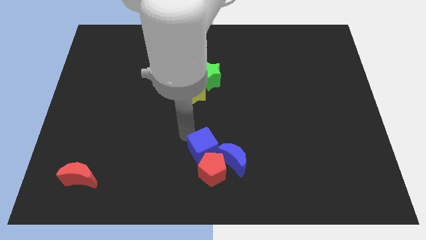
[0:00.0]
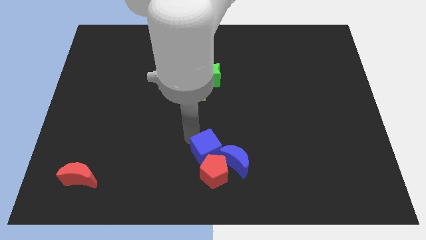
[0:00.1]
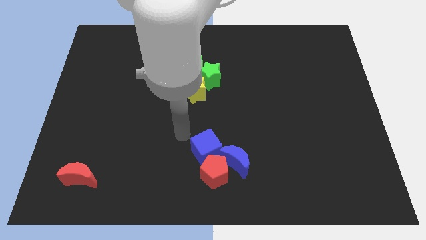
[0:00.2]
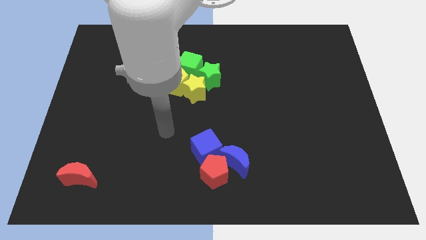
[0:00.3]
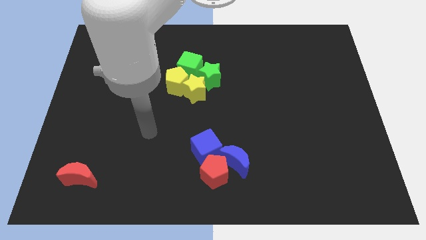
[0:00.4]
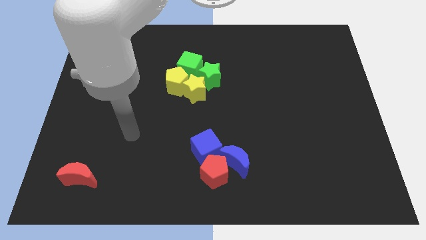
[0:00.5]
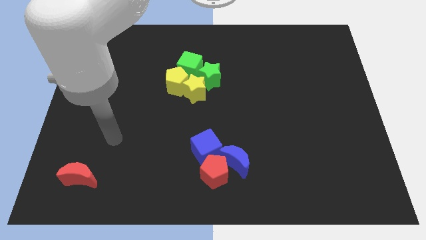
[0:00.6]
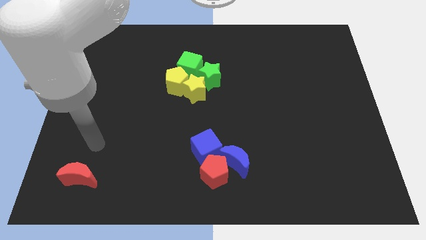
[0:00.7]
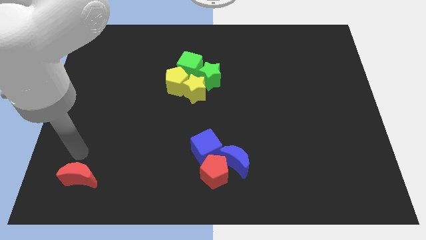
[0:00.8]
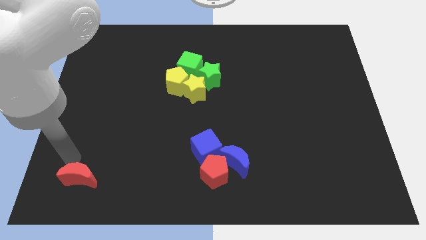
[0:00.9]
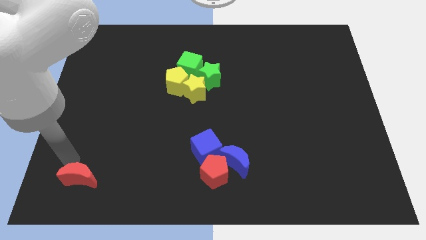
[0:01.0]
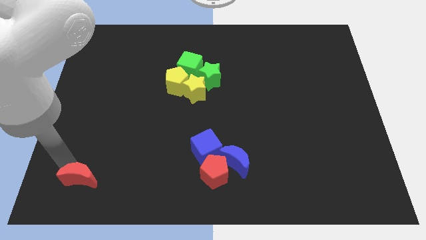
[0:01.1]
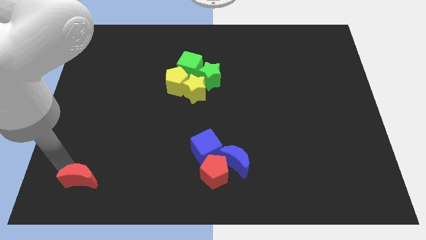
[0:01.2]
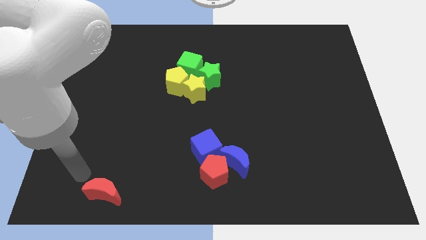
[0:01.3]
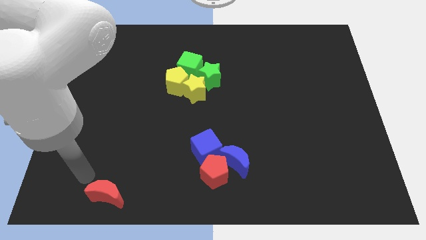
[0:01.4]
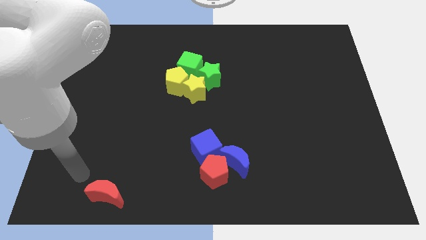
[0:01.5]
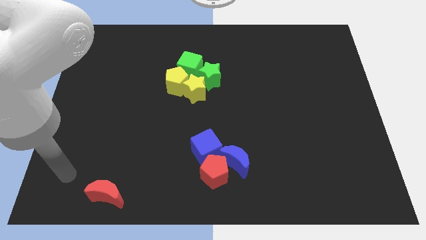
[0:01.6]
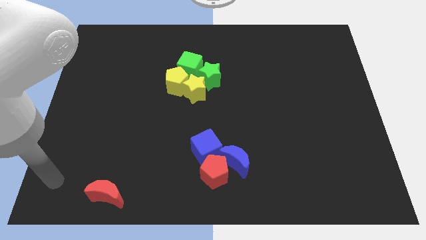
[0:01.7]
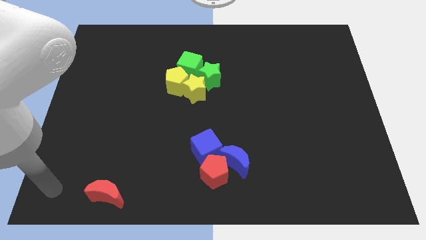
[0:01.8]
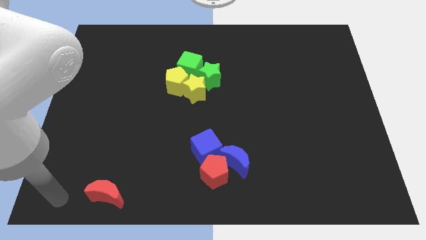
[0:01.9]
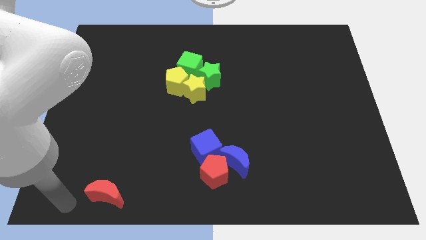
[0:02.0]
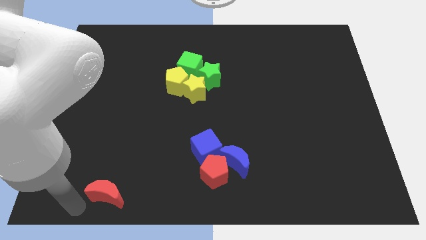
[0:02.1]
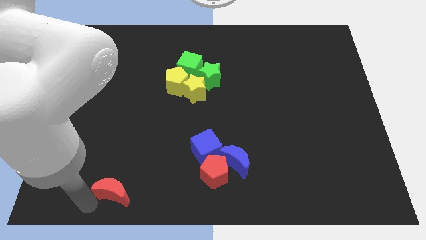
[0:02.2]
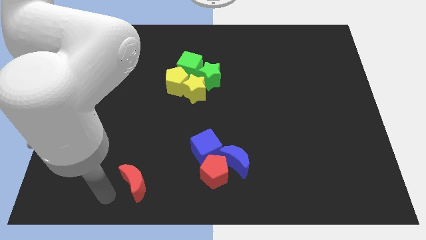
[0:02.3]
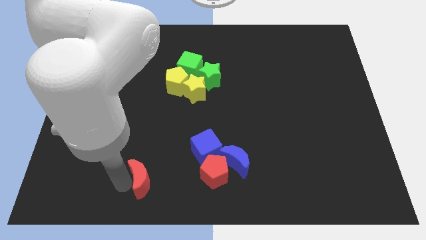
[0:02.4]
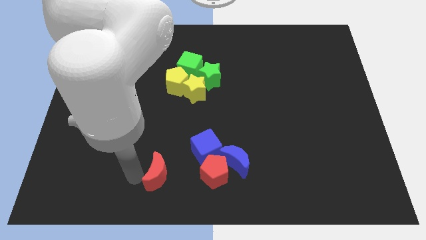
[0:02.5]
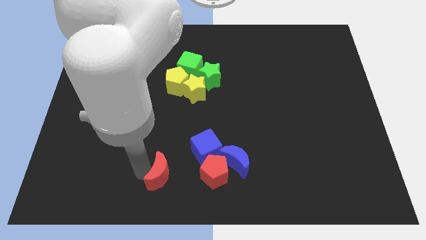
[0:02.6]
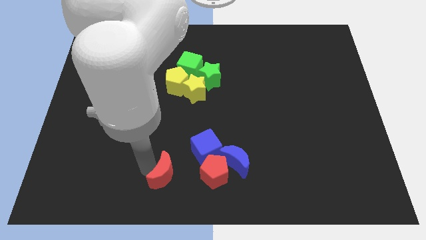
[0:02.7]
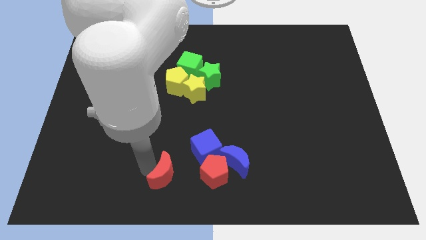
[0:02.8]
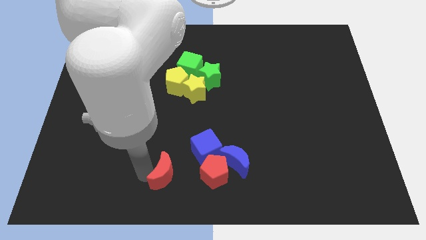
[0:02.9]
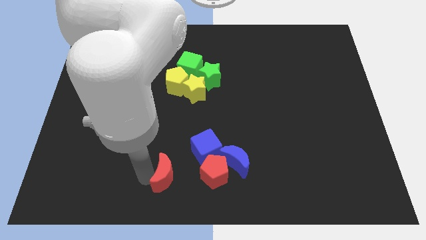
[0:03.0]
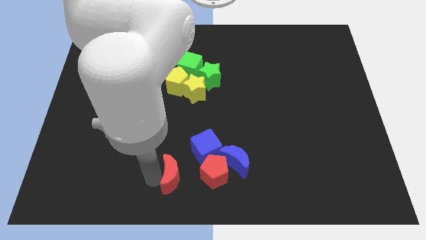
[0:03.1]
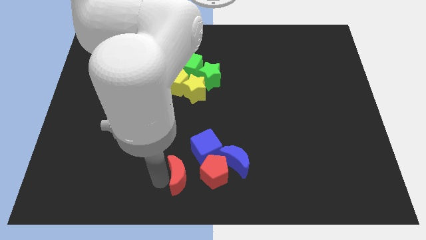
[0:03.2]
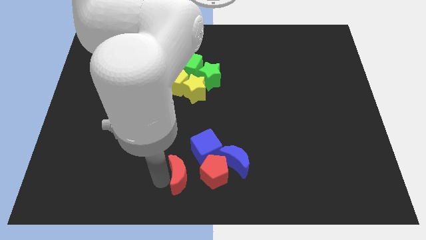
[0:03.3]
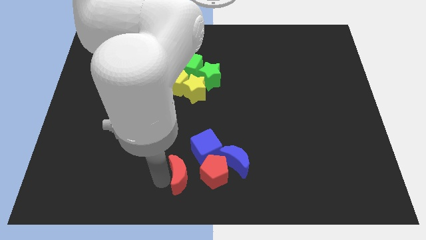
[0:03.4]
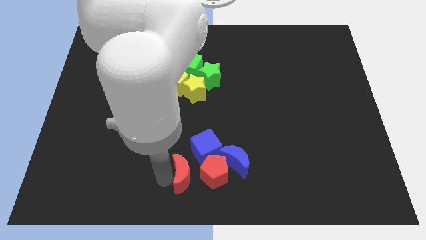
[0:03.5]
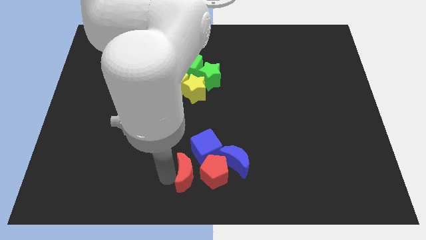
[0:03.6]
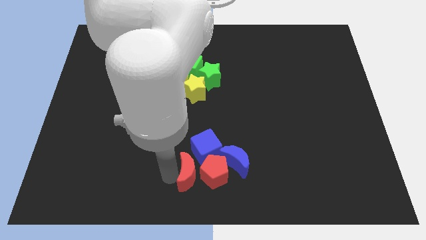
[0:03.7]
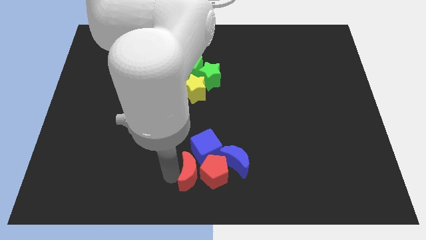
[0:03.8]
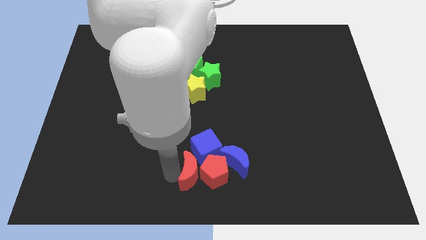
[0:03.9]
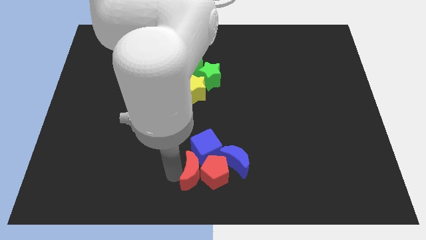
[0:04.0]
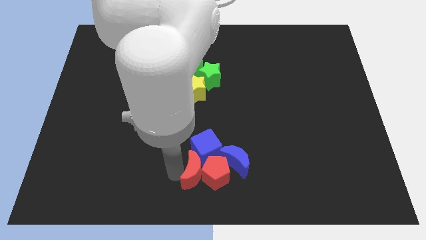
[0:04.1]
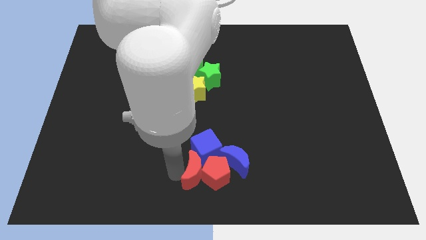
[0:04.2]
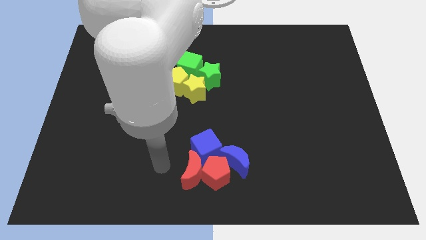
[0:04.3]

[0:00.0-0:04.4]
move red moon on left side of red pentagon

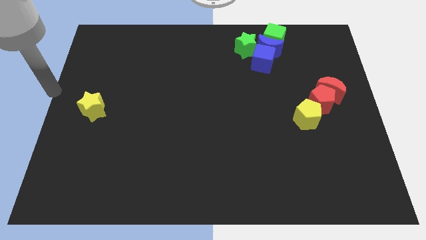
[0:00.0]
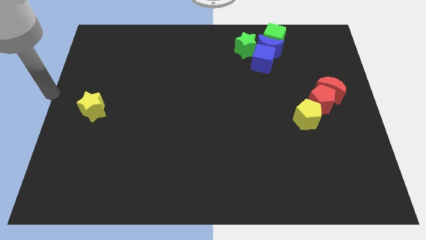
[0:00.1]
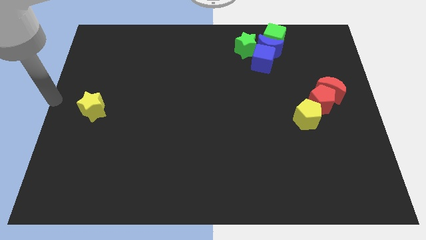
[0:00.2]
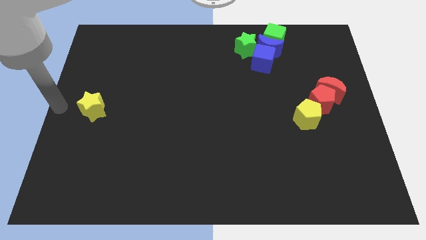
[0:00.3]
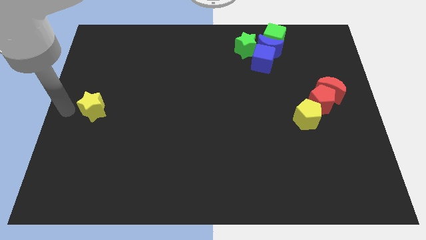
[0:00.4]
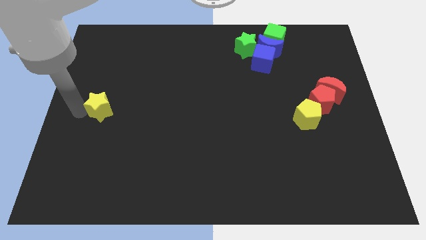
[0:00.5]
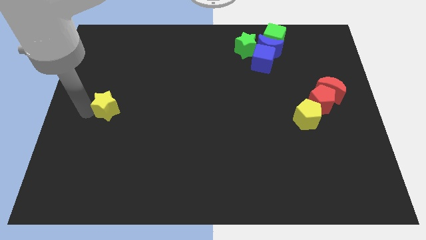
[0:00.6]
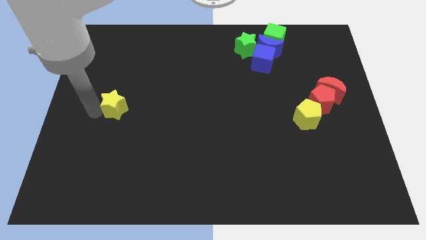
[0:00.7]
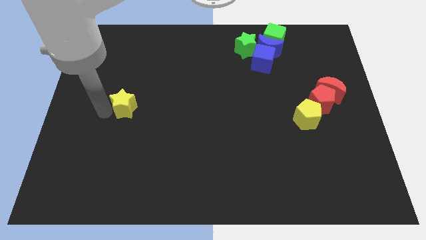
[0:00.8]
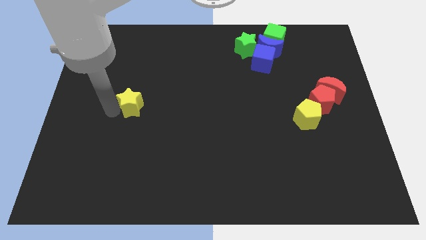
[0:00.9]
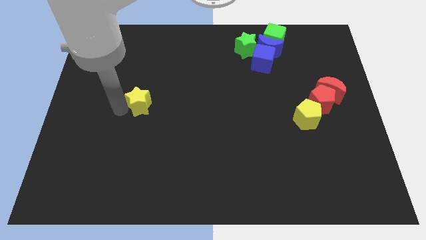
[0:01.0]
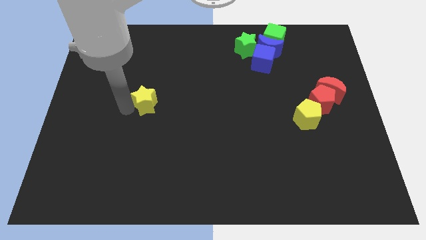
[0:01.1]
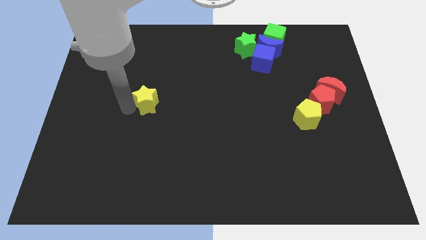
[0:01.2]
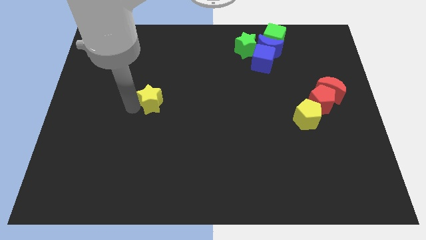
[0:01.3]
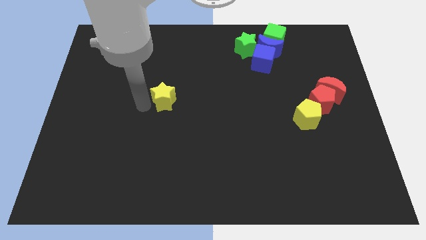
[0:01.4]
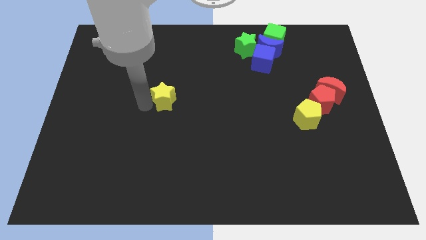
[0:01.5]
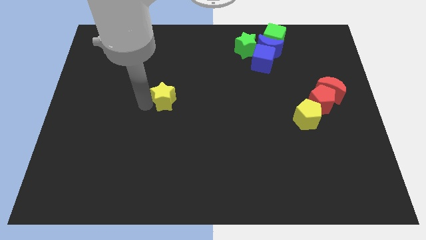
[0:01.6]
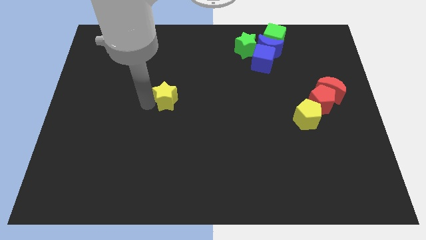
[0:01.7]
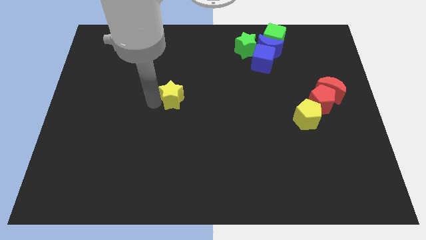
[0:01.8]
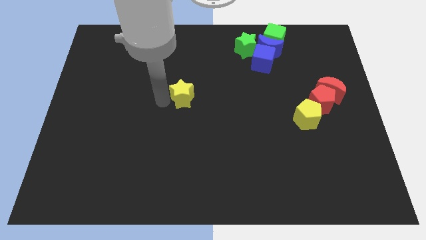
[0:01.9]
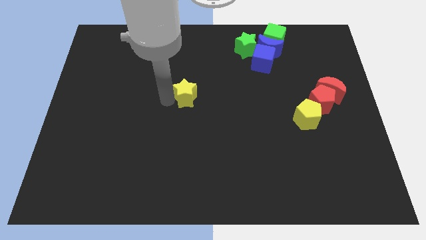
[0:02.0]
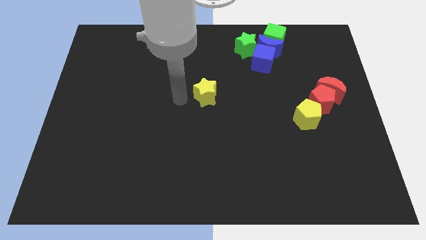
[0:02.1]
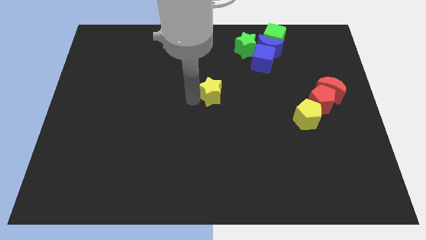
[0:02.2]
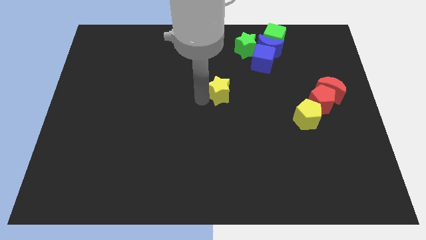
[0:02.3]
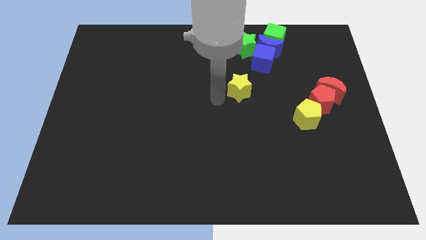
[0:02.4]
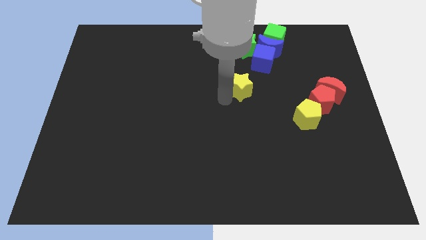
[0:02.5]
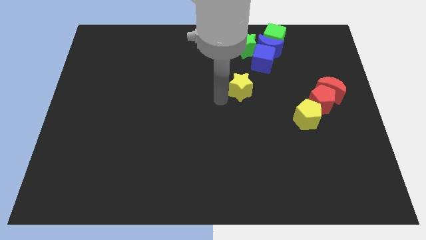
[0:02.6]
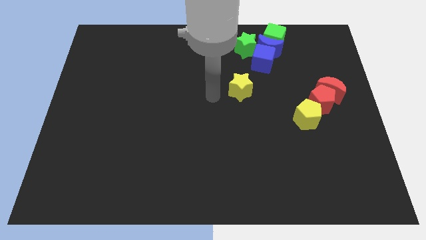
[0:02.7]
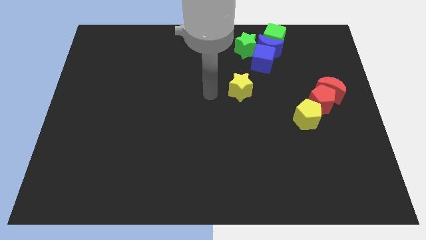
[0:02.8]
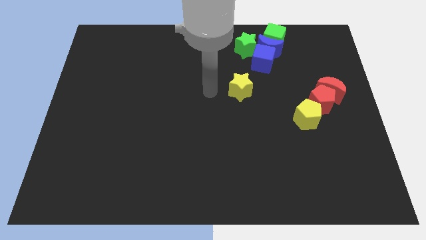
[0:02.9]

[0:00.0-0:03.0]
push the yellow star towards center right of the board

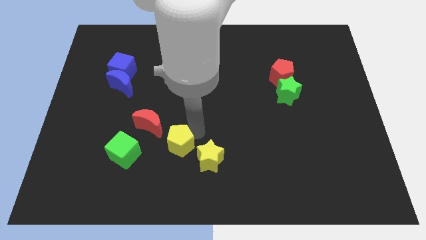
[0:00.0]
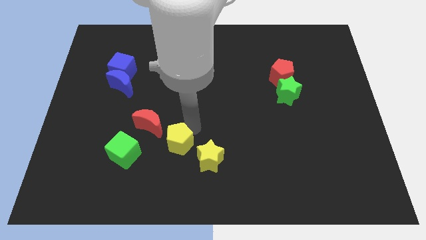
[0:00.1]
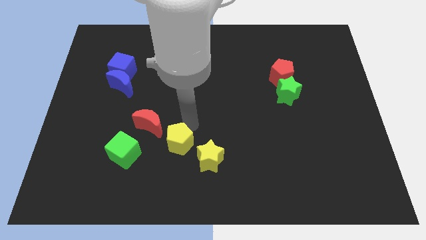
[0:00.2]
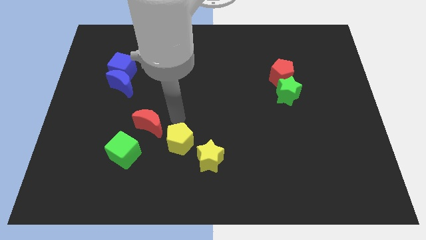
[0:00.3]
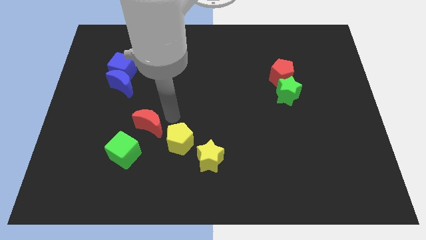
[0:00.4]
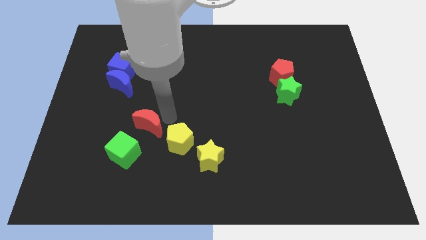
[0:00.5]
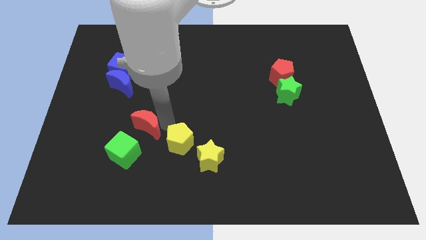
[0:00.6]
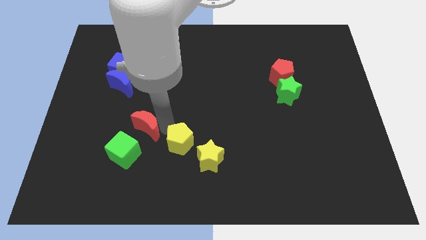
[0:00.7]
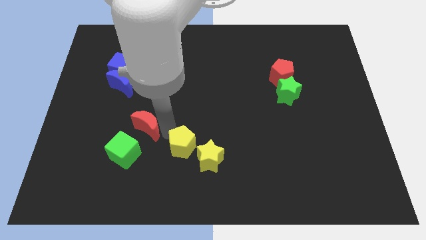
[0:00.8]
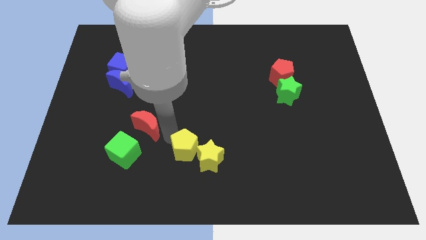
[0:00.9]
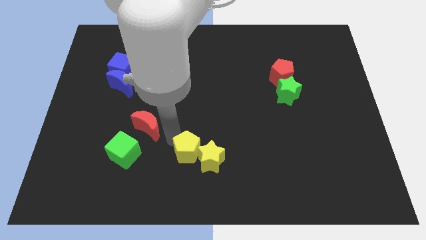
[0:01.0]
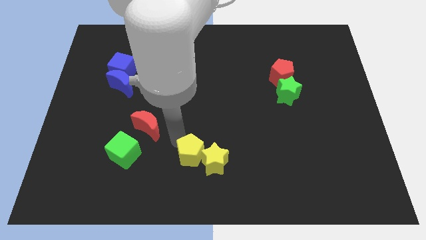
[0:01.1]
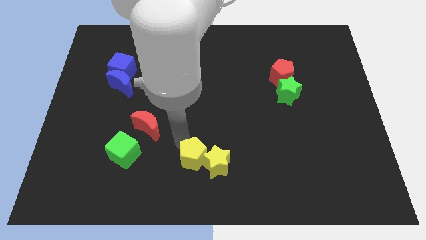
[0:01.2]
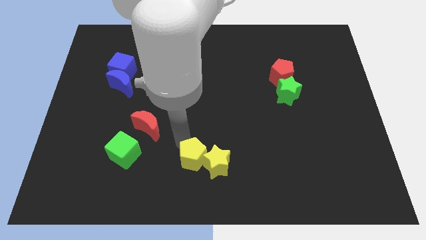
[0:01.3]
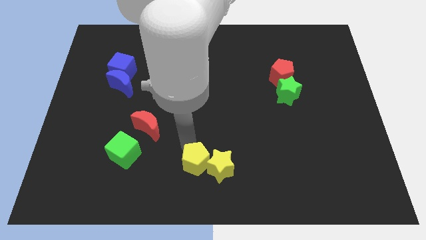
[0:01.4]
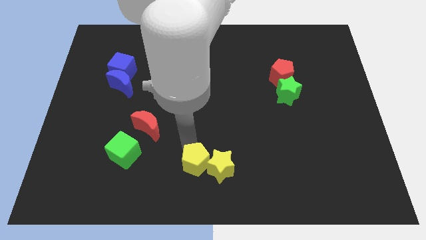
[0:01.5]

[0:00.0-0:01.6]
push the yellow pentagon into the yellow star
